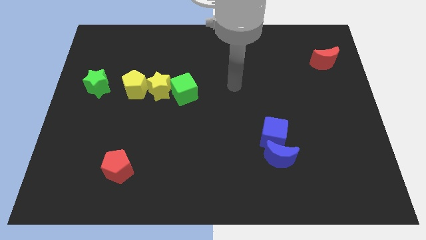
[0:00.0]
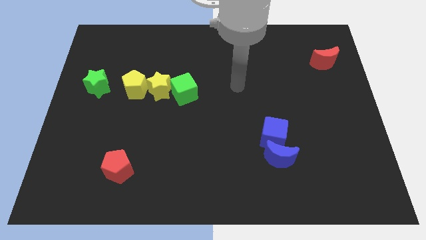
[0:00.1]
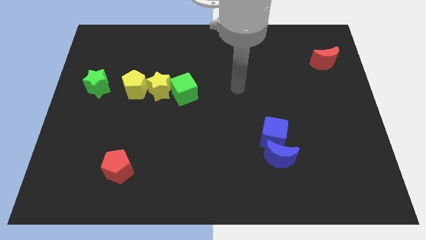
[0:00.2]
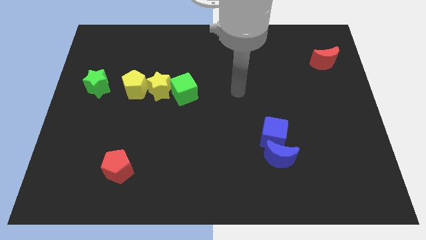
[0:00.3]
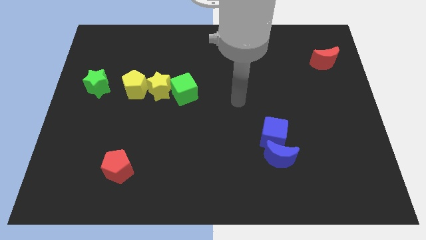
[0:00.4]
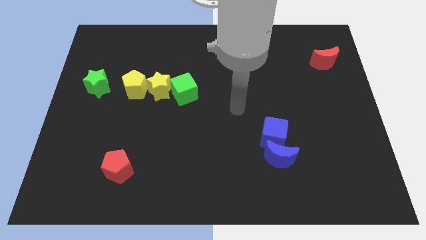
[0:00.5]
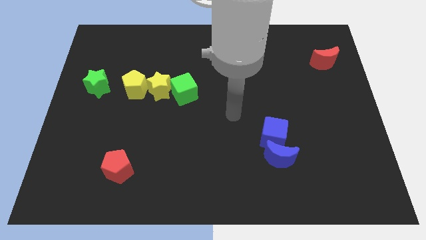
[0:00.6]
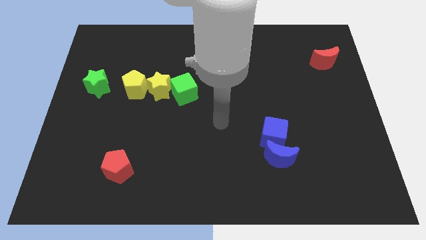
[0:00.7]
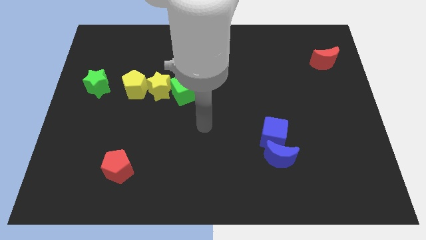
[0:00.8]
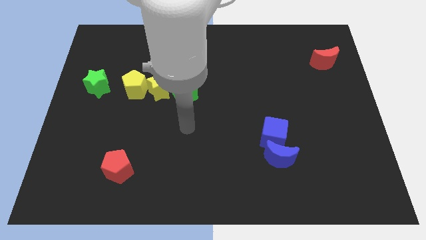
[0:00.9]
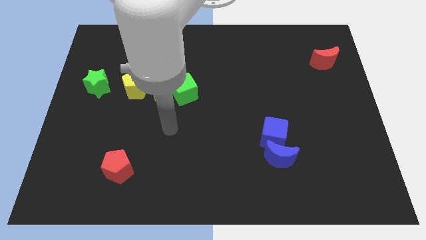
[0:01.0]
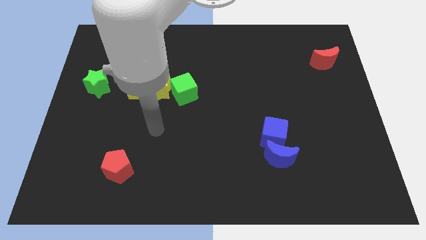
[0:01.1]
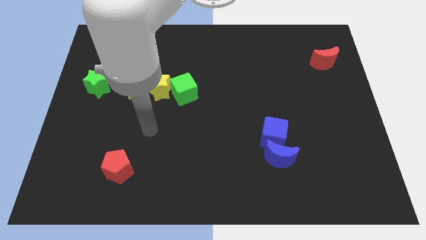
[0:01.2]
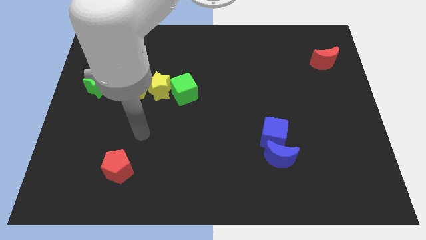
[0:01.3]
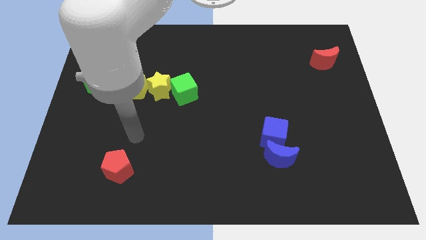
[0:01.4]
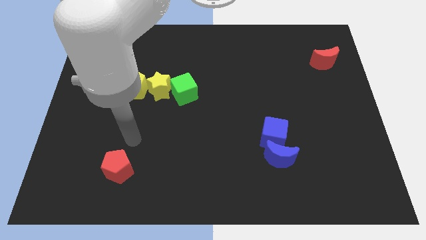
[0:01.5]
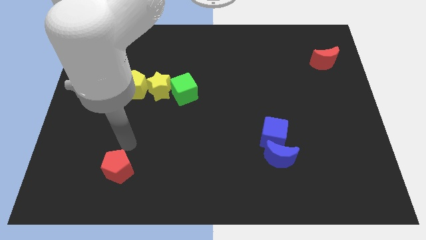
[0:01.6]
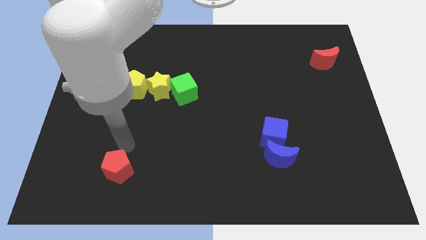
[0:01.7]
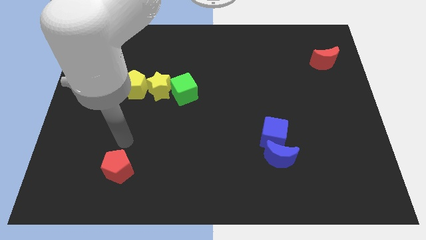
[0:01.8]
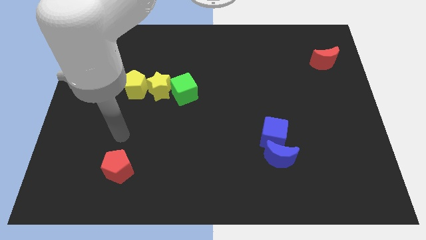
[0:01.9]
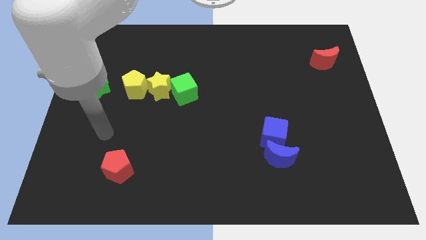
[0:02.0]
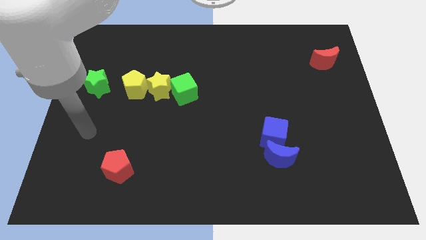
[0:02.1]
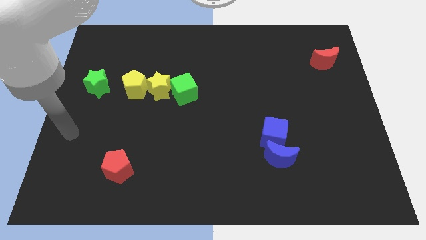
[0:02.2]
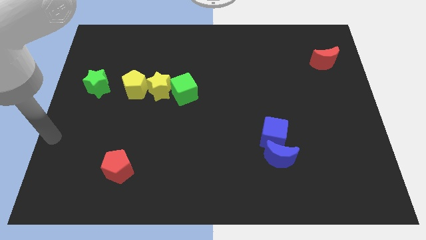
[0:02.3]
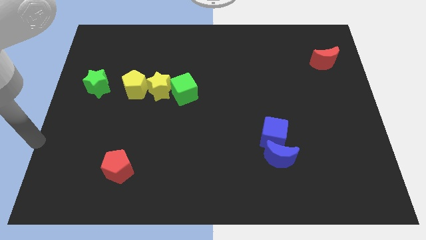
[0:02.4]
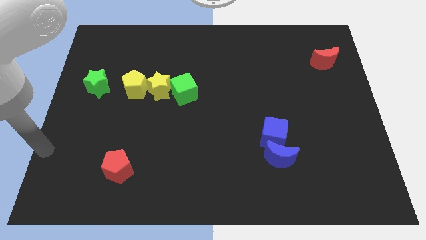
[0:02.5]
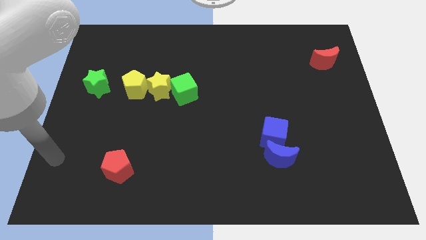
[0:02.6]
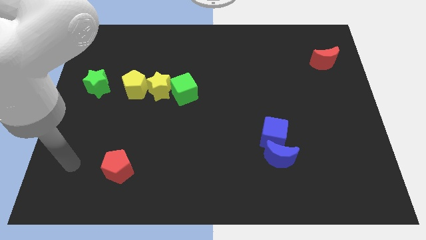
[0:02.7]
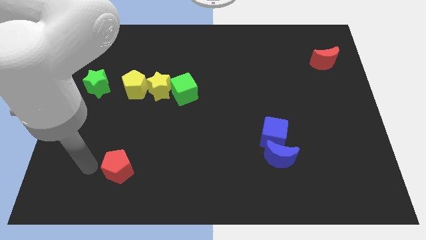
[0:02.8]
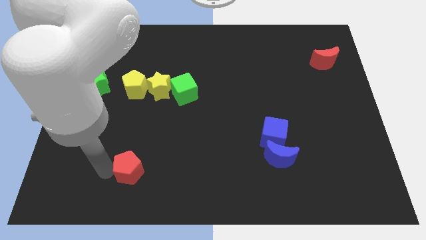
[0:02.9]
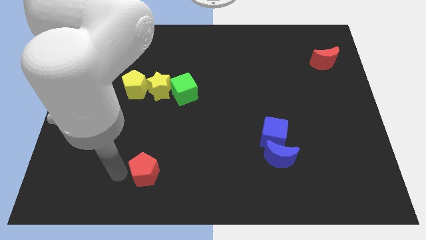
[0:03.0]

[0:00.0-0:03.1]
move your arm on the left side of the red pentagon

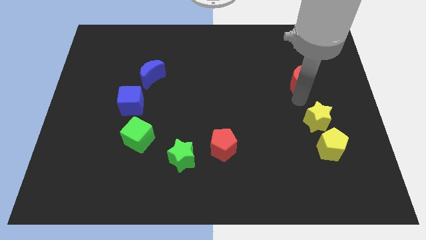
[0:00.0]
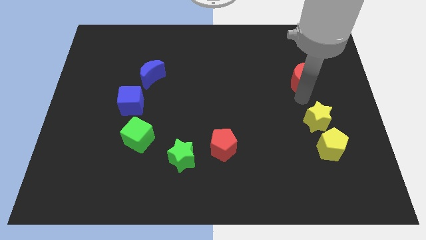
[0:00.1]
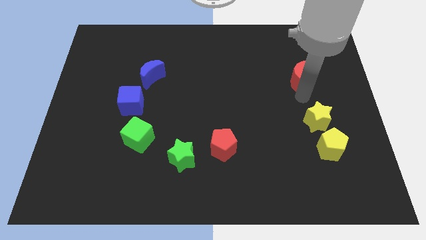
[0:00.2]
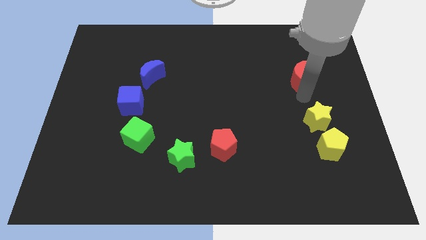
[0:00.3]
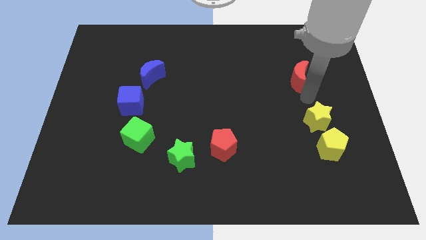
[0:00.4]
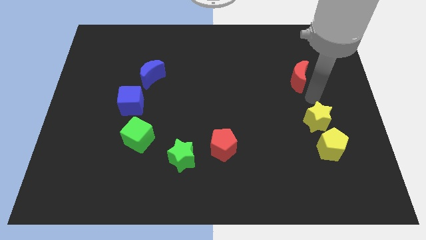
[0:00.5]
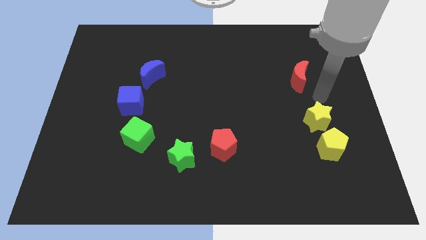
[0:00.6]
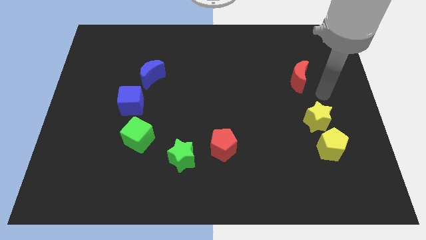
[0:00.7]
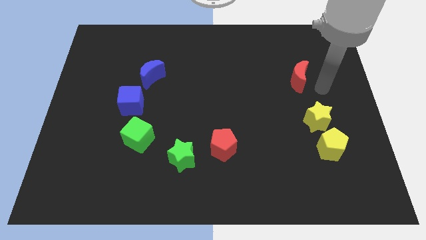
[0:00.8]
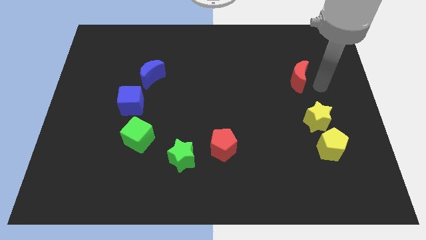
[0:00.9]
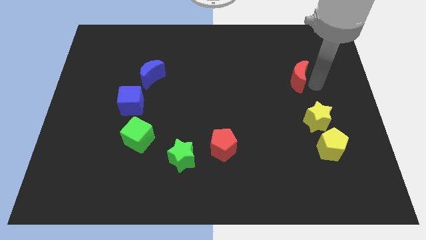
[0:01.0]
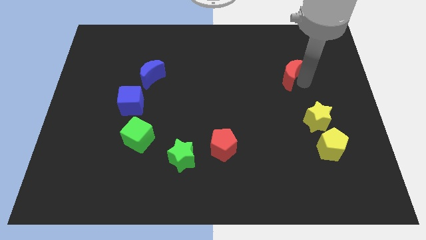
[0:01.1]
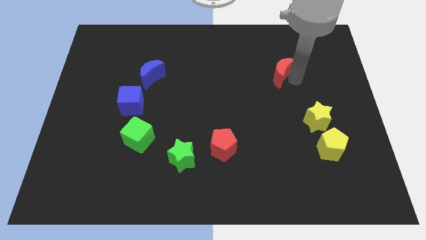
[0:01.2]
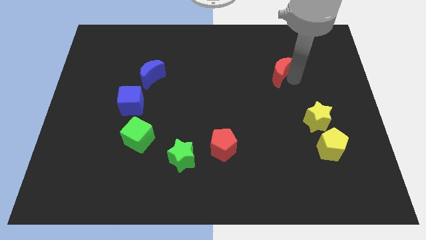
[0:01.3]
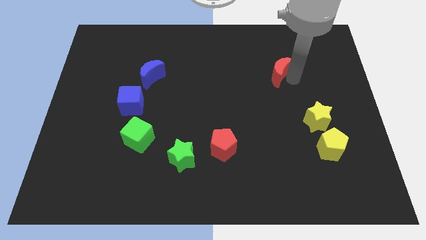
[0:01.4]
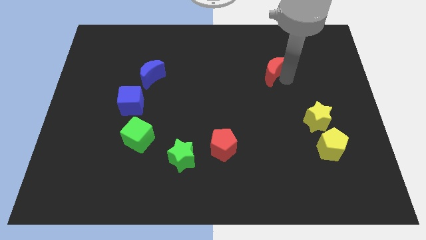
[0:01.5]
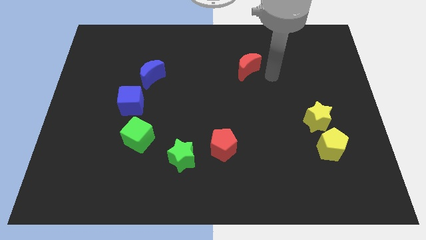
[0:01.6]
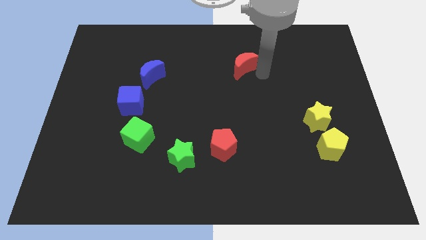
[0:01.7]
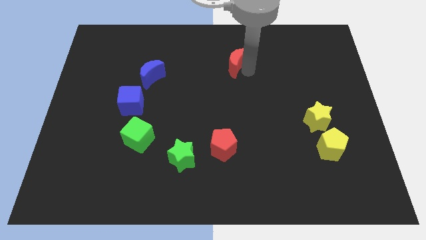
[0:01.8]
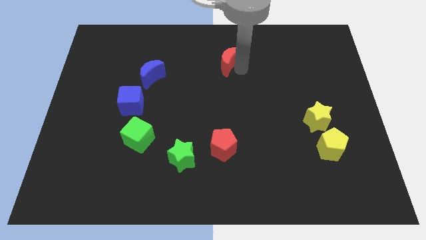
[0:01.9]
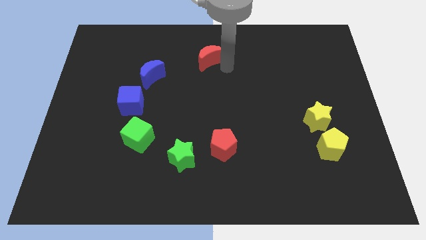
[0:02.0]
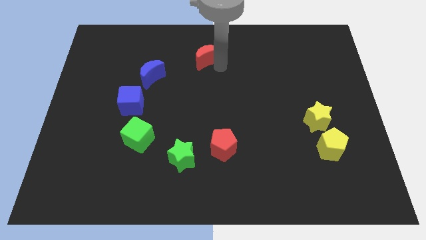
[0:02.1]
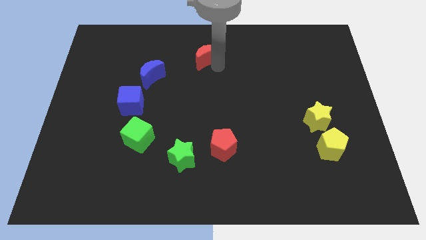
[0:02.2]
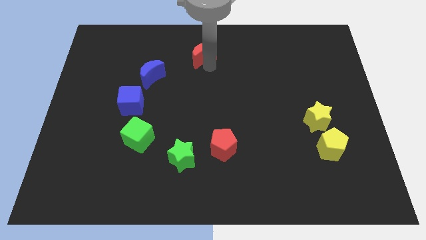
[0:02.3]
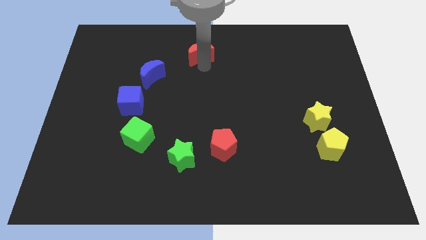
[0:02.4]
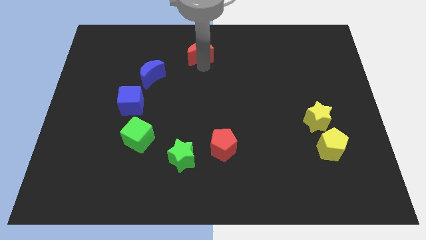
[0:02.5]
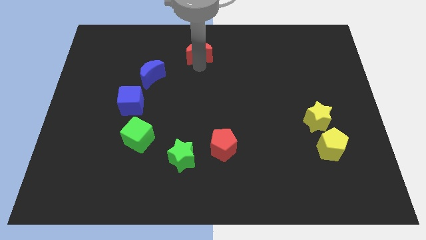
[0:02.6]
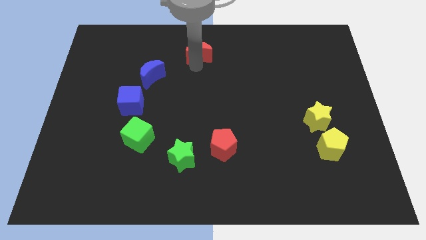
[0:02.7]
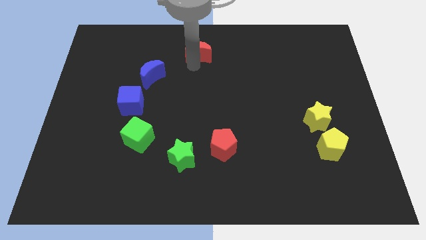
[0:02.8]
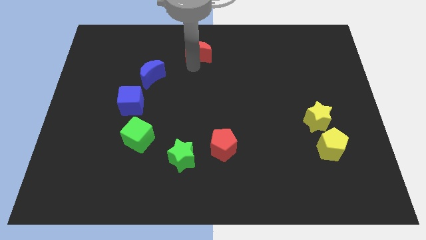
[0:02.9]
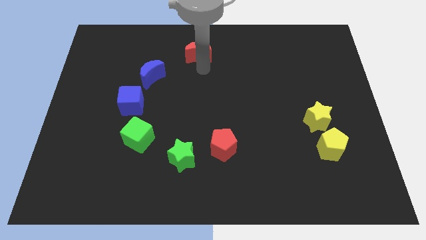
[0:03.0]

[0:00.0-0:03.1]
slide red moon to the top right of blue moon

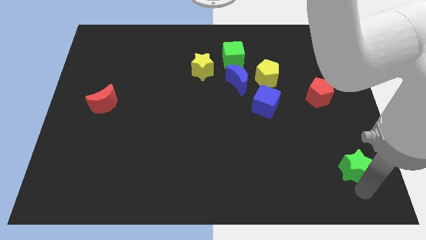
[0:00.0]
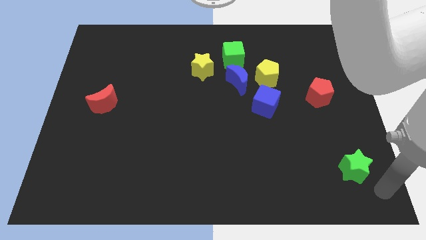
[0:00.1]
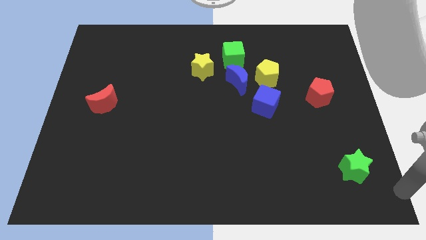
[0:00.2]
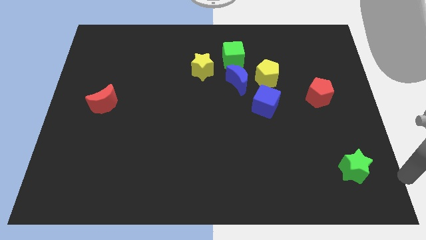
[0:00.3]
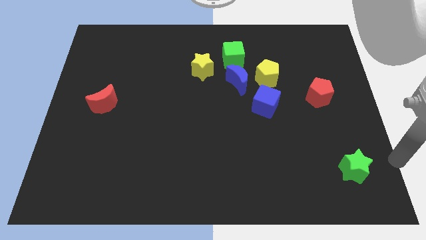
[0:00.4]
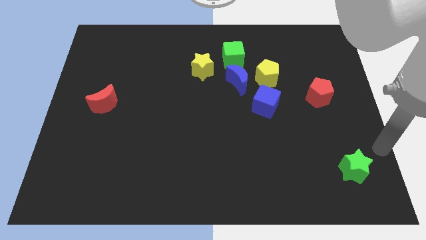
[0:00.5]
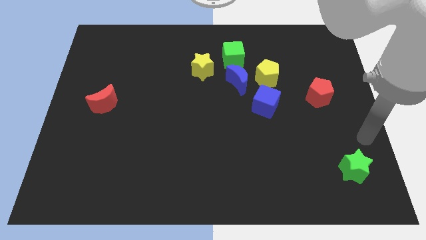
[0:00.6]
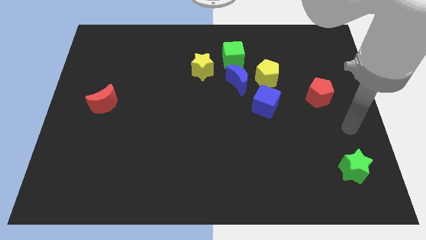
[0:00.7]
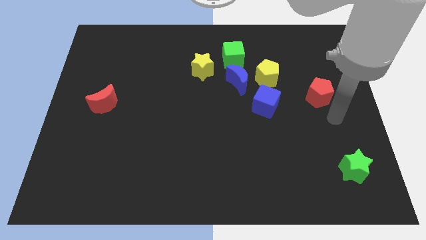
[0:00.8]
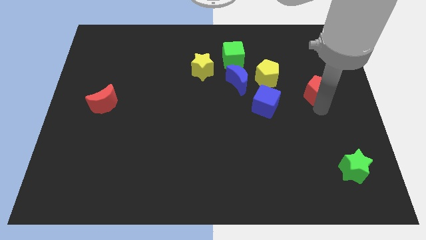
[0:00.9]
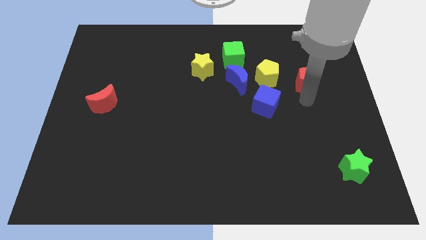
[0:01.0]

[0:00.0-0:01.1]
tap the bottom side of the red pentagon

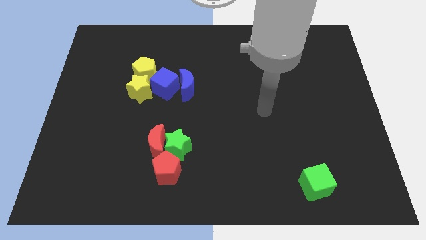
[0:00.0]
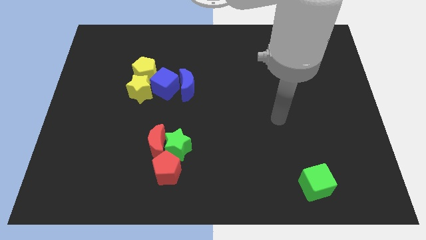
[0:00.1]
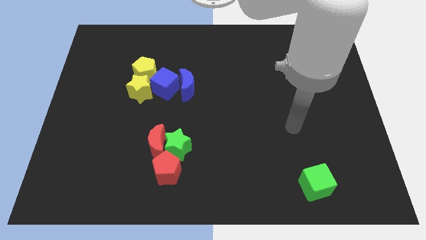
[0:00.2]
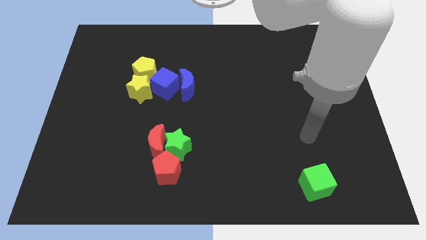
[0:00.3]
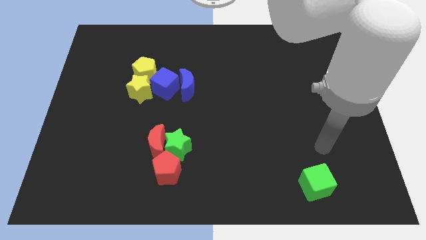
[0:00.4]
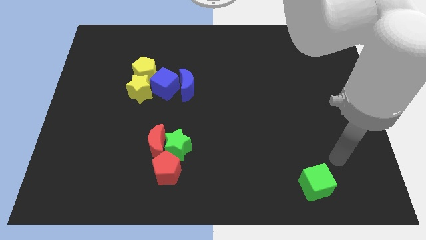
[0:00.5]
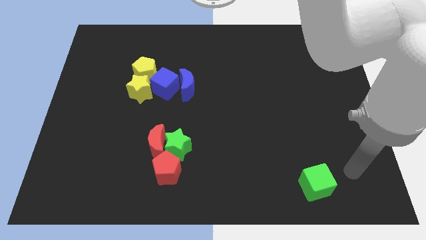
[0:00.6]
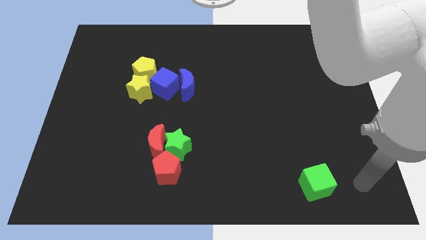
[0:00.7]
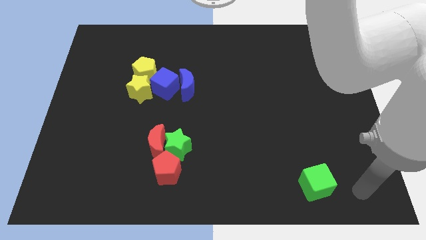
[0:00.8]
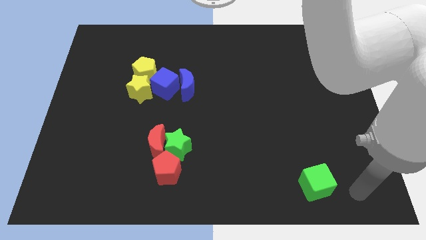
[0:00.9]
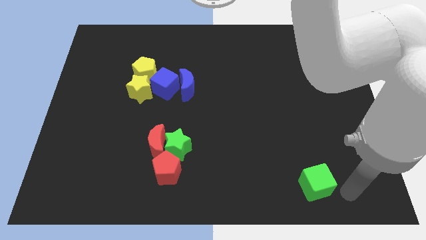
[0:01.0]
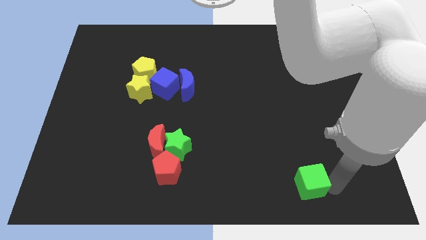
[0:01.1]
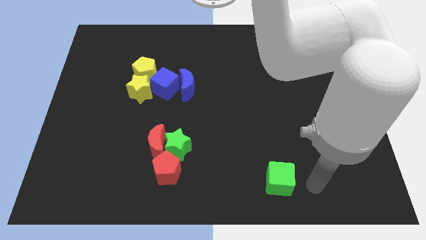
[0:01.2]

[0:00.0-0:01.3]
push the green cube slightly left

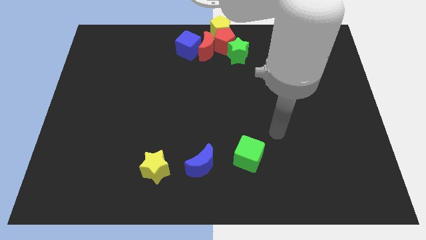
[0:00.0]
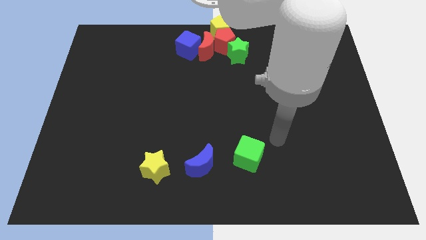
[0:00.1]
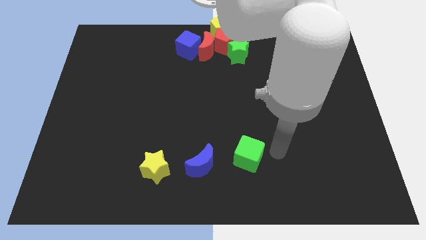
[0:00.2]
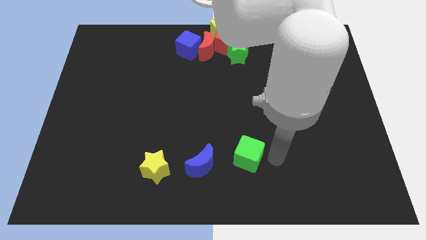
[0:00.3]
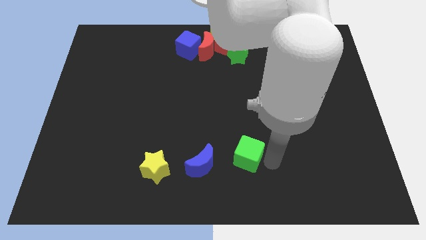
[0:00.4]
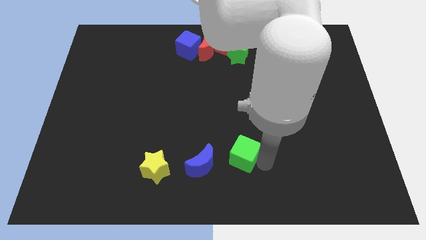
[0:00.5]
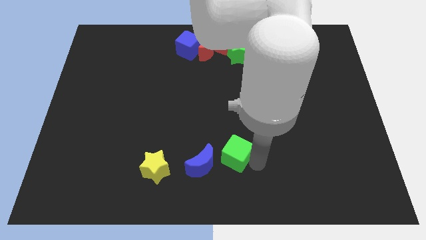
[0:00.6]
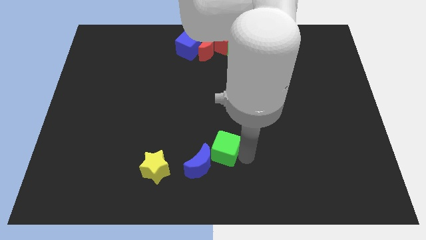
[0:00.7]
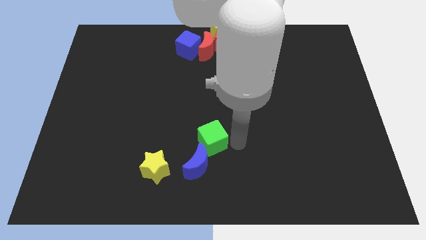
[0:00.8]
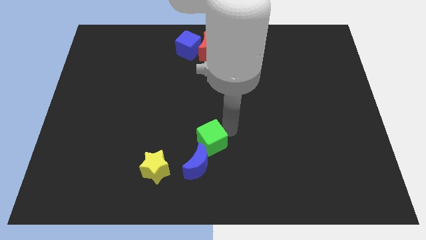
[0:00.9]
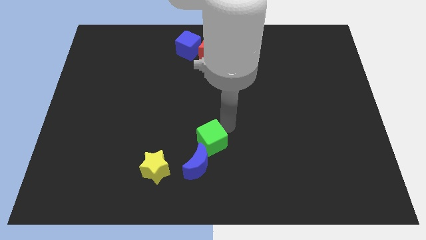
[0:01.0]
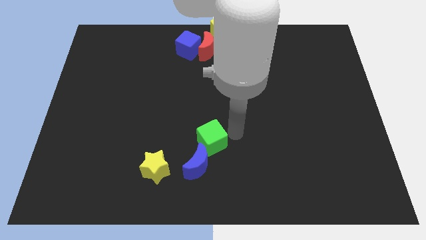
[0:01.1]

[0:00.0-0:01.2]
move the green cube to the top side of the blue crescent
